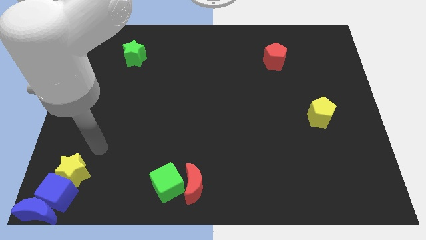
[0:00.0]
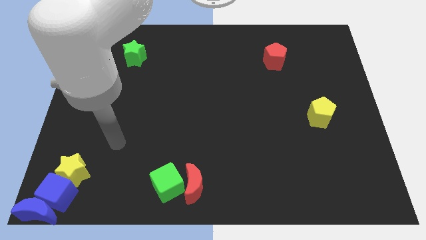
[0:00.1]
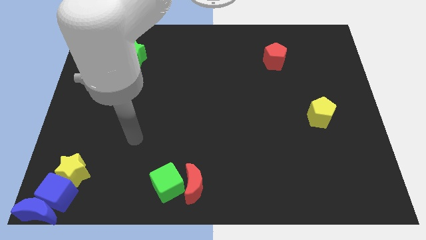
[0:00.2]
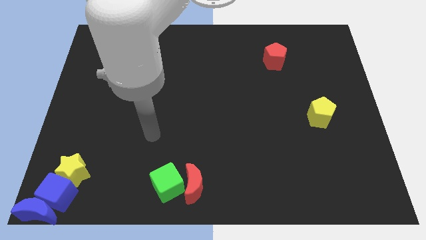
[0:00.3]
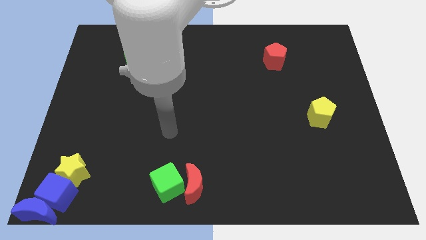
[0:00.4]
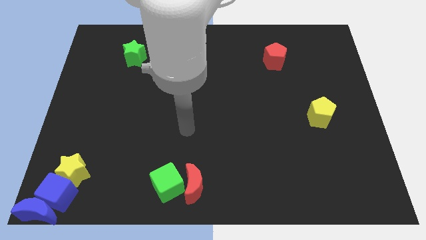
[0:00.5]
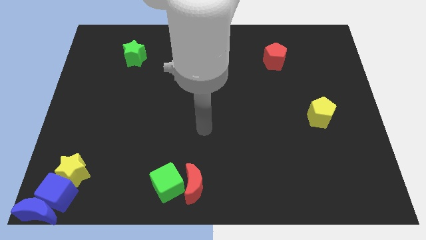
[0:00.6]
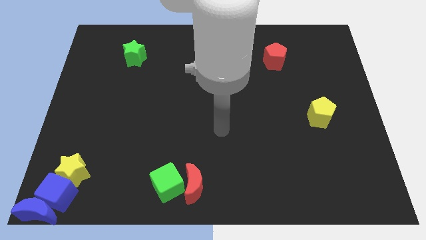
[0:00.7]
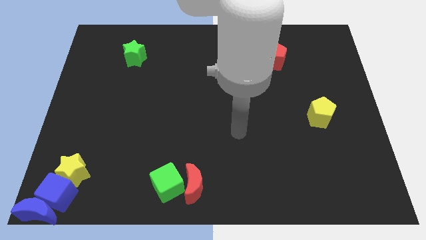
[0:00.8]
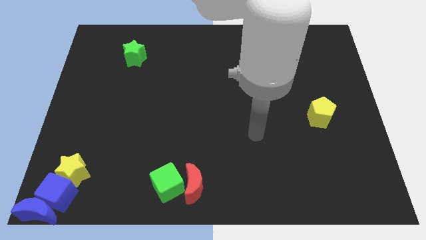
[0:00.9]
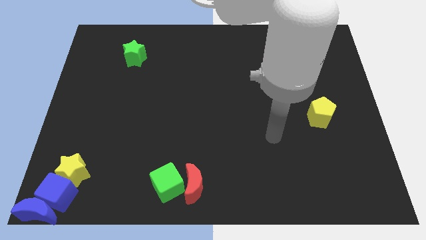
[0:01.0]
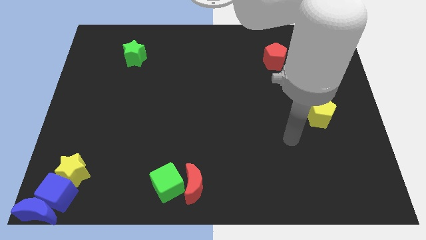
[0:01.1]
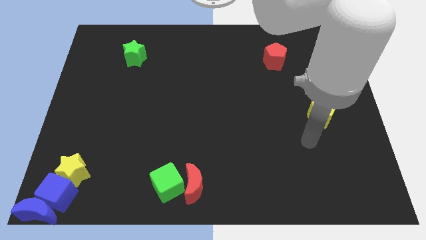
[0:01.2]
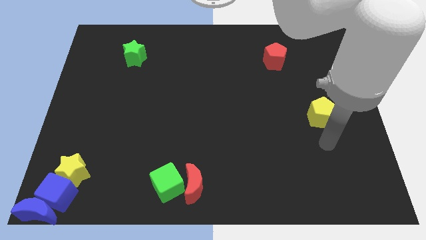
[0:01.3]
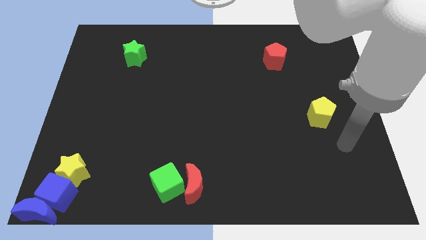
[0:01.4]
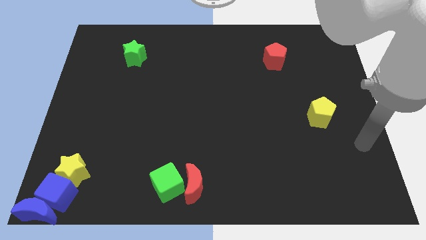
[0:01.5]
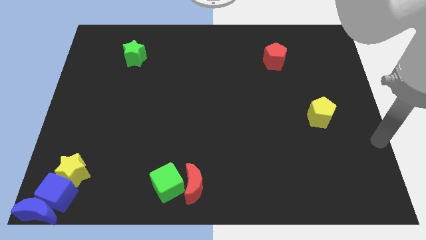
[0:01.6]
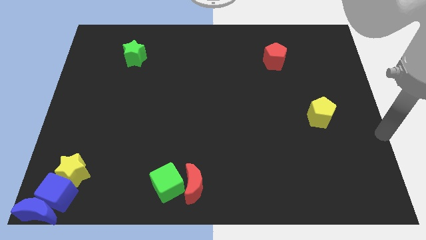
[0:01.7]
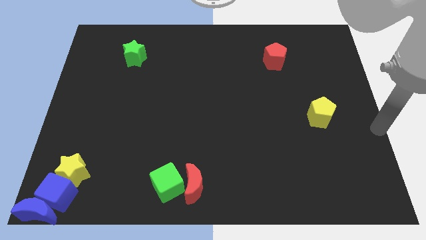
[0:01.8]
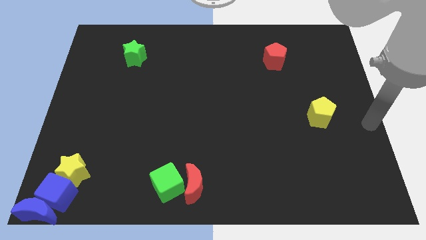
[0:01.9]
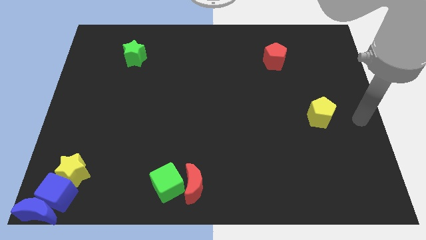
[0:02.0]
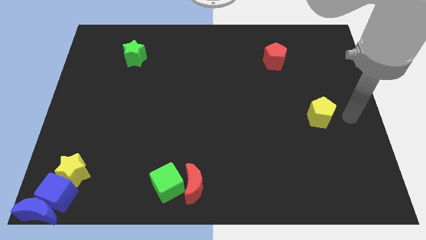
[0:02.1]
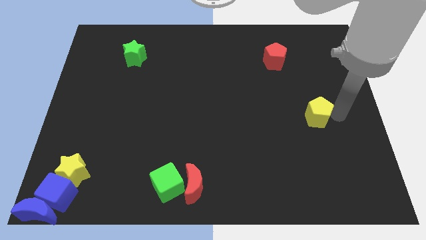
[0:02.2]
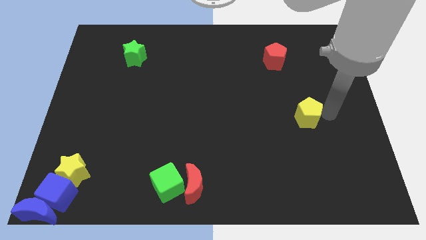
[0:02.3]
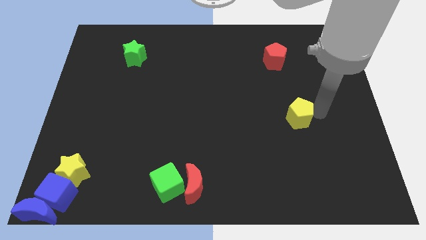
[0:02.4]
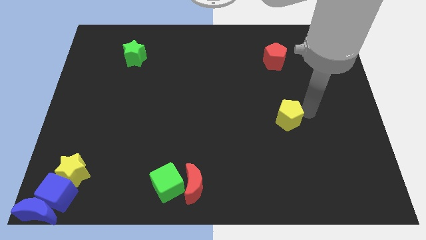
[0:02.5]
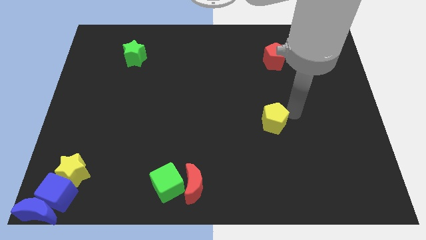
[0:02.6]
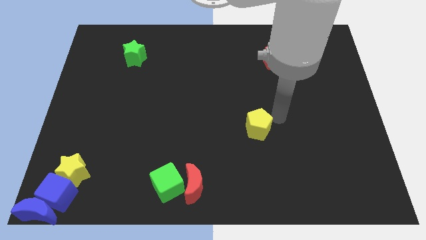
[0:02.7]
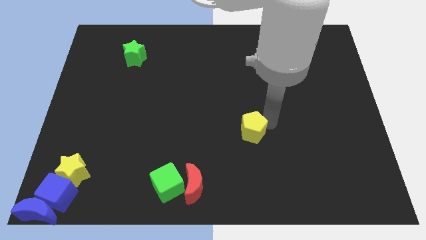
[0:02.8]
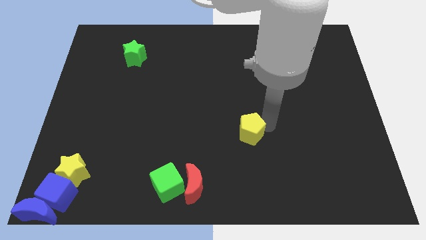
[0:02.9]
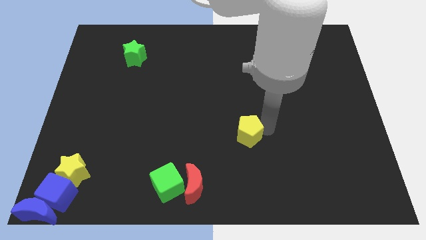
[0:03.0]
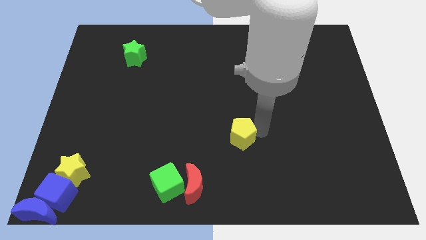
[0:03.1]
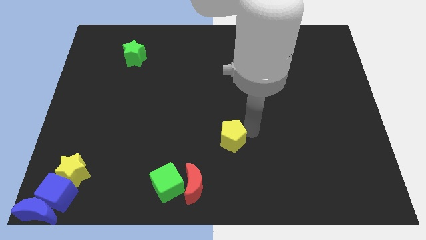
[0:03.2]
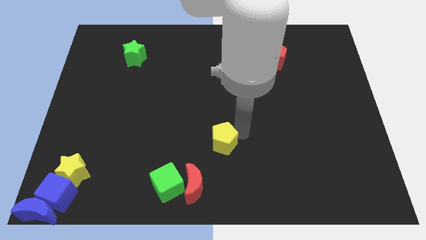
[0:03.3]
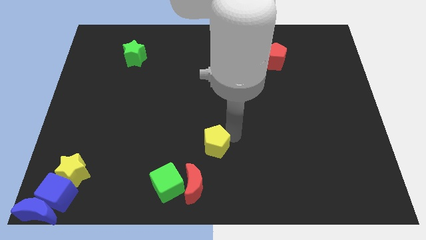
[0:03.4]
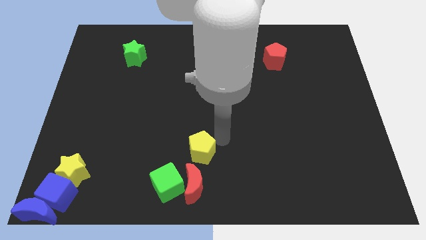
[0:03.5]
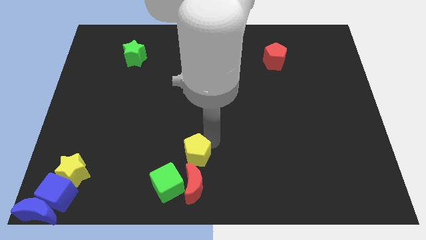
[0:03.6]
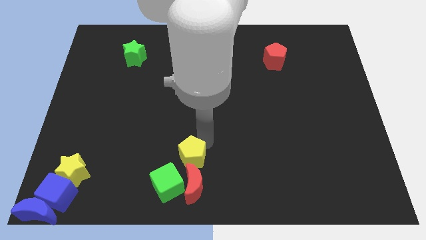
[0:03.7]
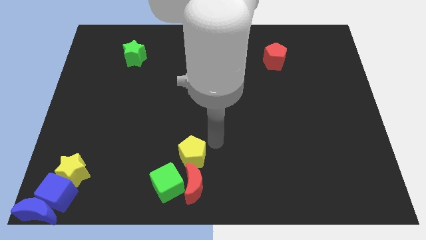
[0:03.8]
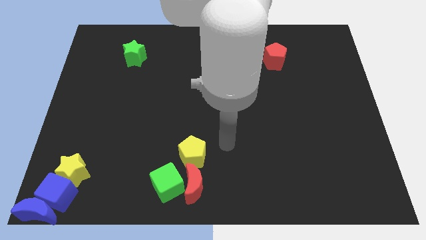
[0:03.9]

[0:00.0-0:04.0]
move the yellow pentagon to the top of red crescent

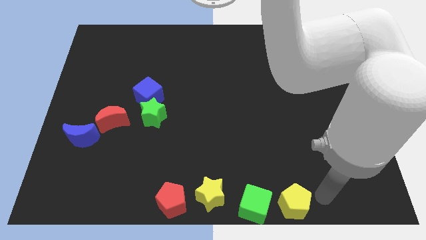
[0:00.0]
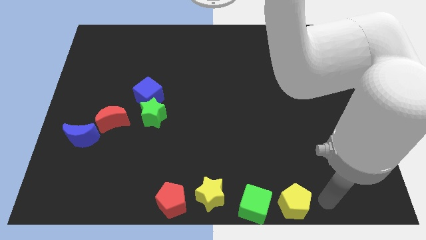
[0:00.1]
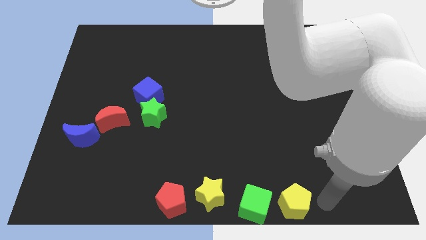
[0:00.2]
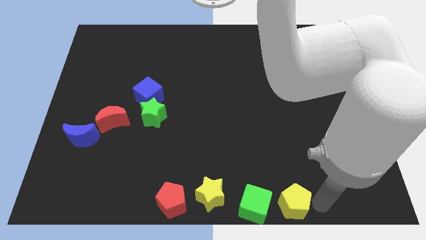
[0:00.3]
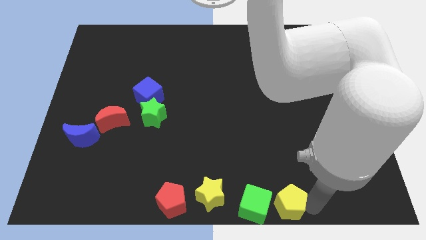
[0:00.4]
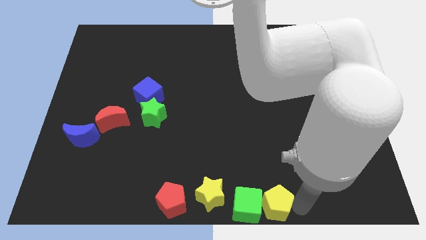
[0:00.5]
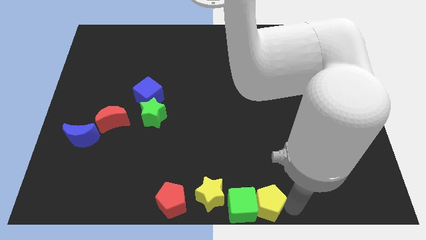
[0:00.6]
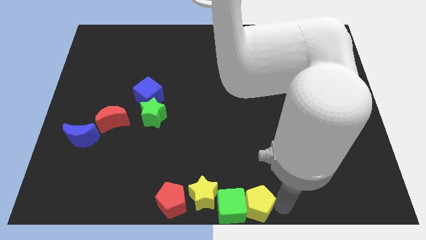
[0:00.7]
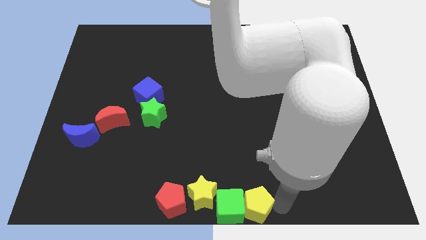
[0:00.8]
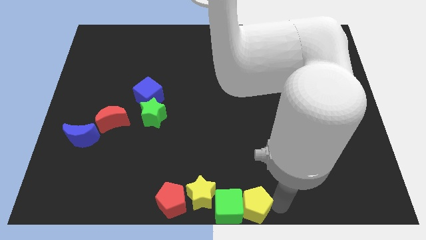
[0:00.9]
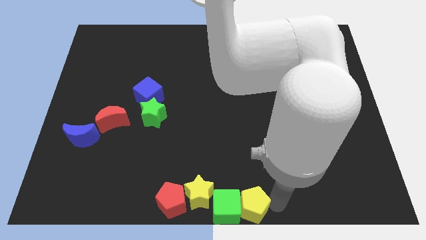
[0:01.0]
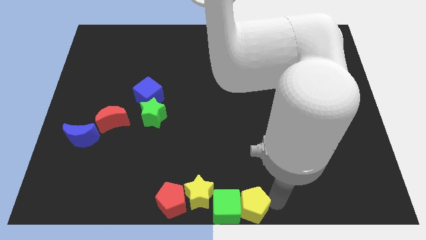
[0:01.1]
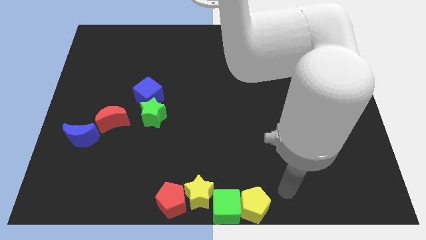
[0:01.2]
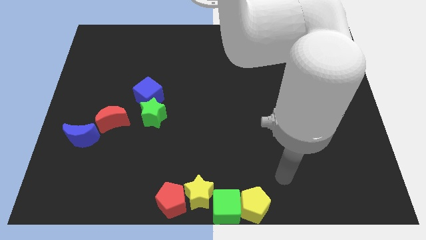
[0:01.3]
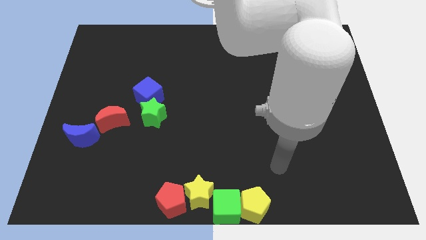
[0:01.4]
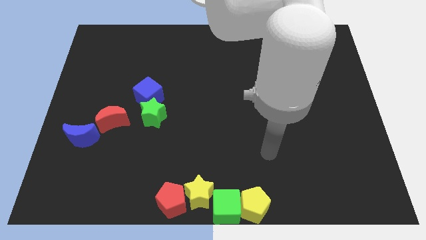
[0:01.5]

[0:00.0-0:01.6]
push the green cube with the help of yellow pentagon

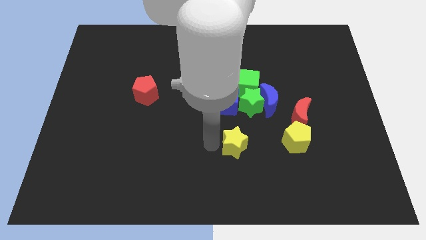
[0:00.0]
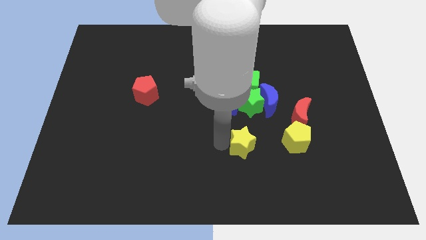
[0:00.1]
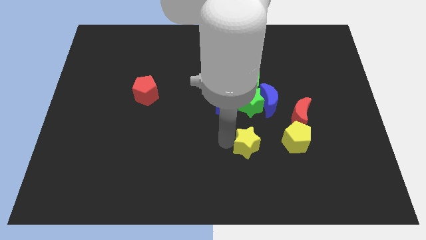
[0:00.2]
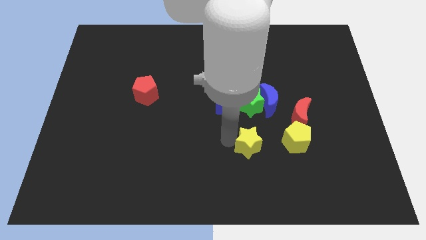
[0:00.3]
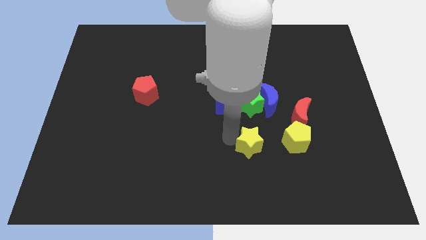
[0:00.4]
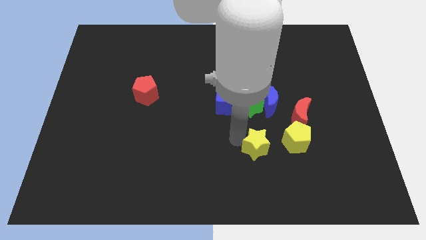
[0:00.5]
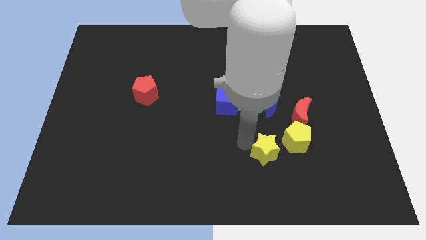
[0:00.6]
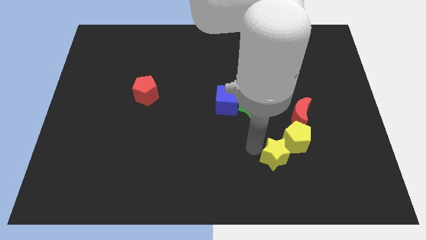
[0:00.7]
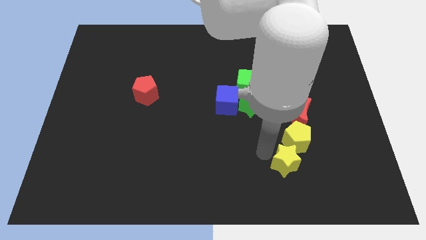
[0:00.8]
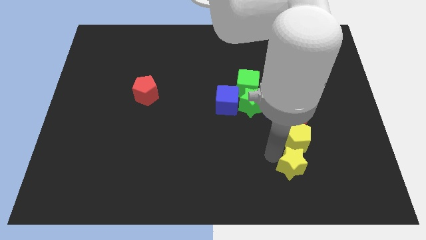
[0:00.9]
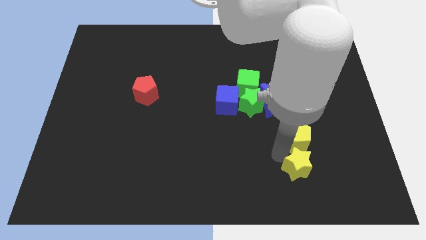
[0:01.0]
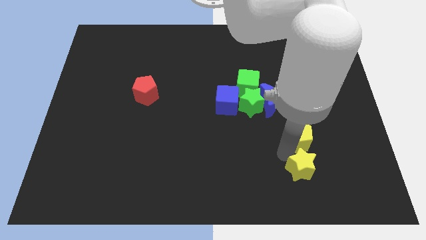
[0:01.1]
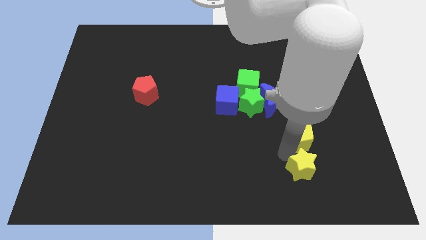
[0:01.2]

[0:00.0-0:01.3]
place the yellow star below the yellow pentagon

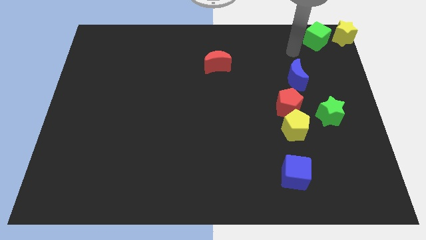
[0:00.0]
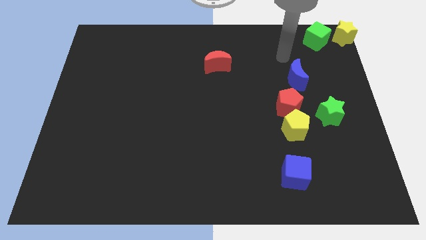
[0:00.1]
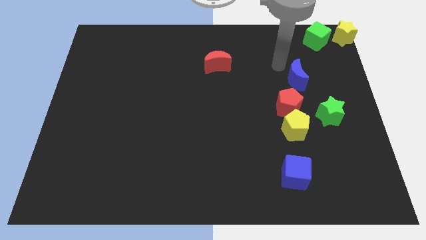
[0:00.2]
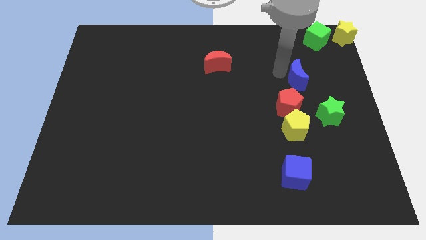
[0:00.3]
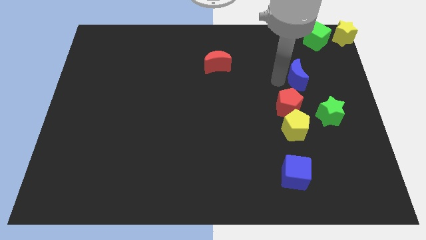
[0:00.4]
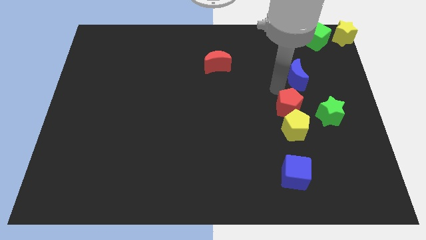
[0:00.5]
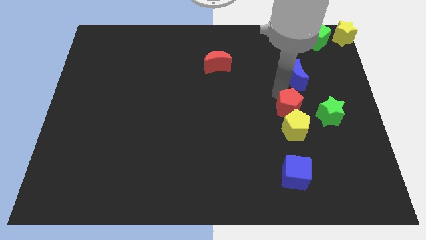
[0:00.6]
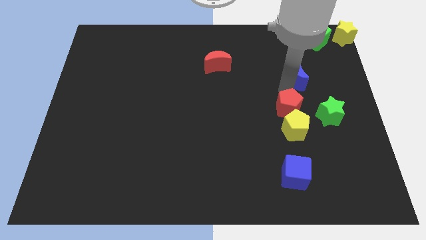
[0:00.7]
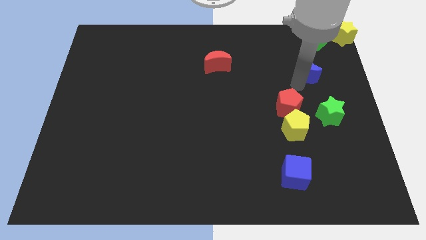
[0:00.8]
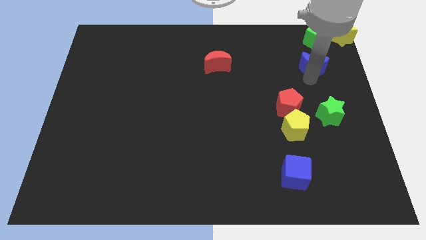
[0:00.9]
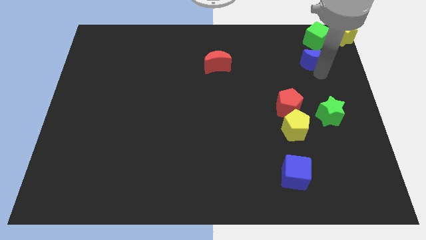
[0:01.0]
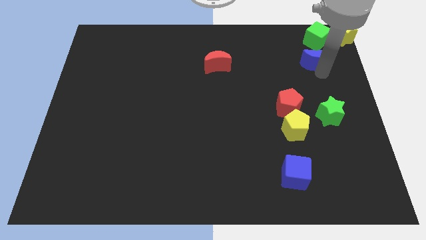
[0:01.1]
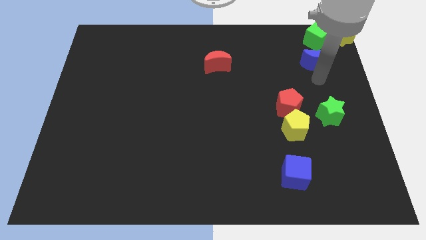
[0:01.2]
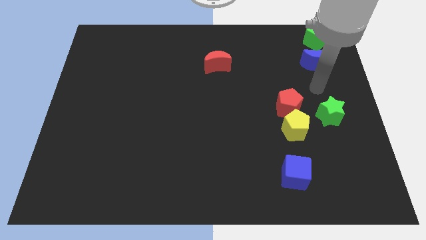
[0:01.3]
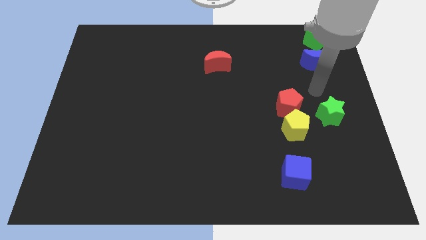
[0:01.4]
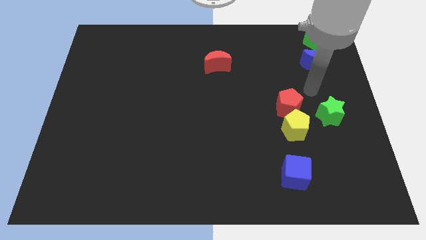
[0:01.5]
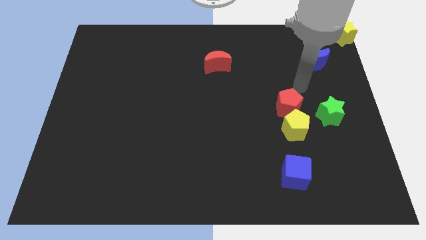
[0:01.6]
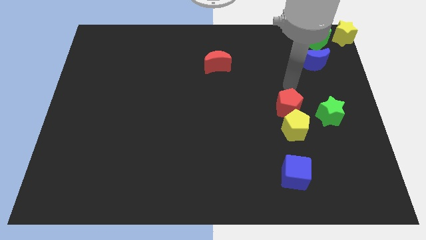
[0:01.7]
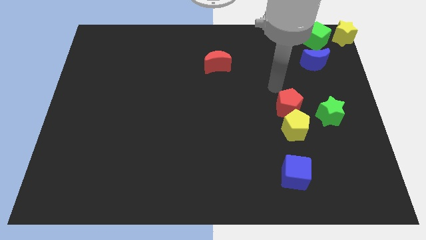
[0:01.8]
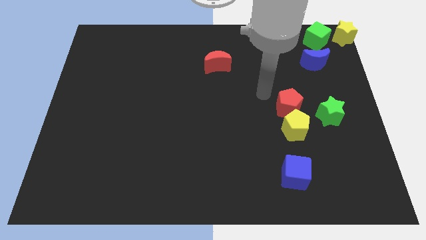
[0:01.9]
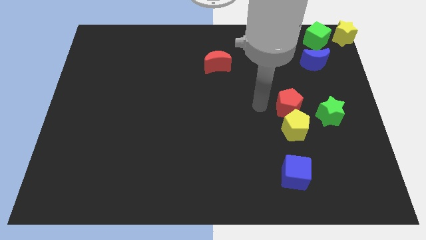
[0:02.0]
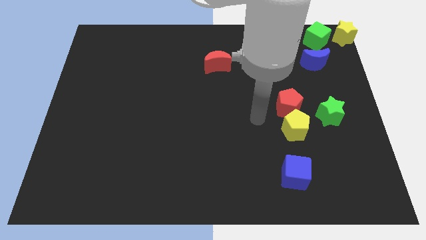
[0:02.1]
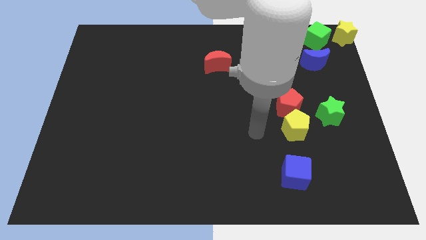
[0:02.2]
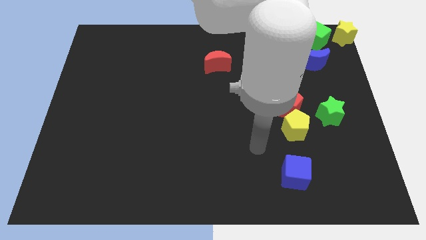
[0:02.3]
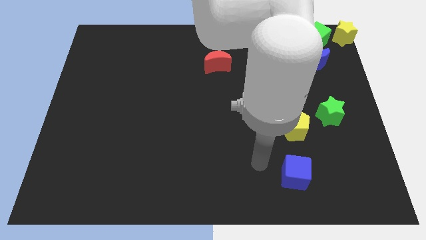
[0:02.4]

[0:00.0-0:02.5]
move blue crescent to the top right of the board
